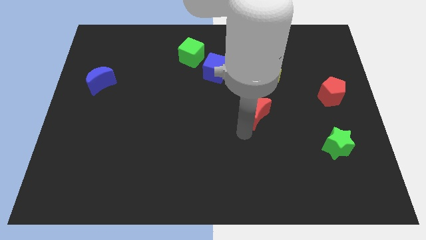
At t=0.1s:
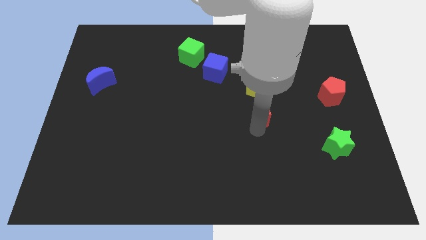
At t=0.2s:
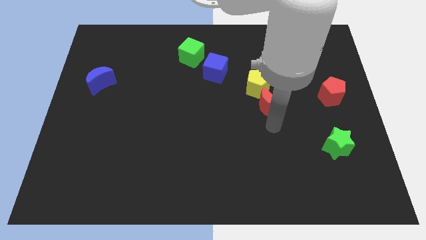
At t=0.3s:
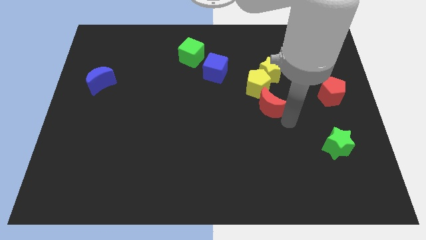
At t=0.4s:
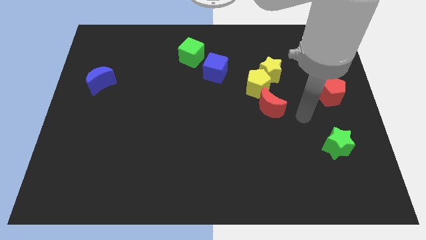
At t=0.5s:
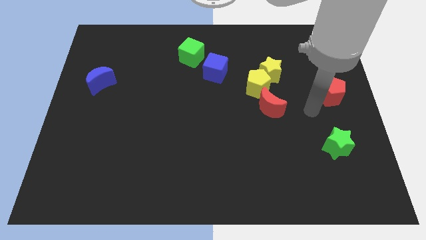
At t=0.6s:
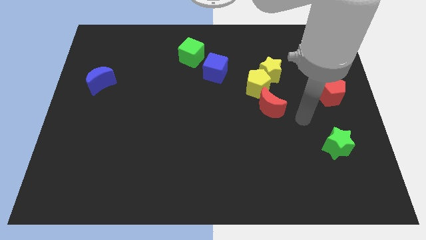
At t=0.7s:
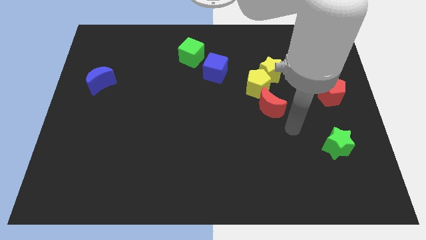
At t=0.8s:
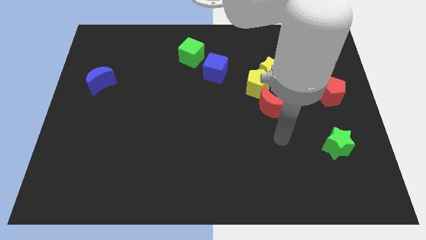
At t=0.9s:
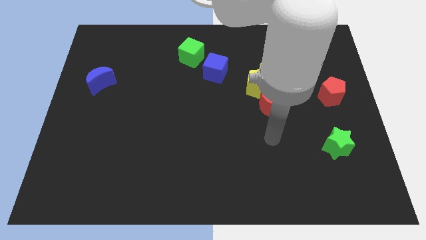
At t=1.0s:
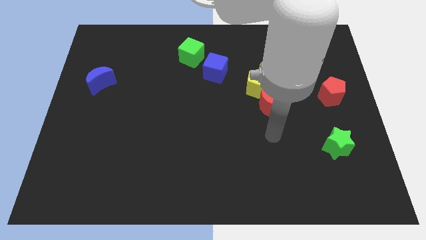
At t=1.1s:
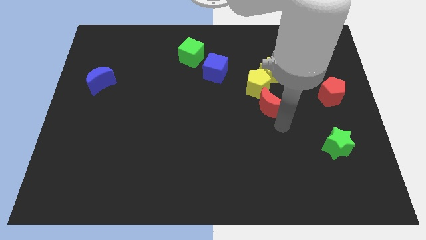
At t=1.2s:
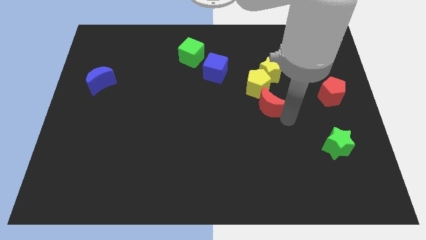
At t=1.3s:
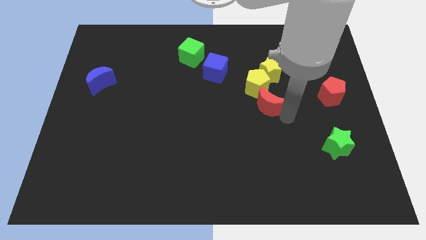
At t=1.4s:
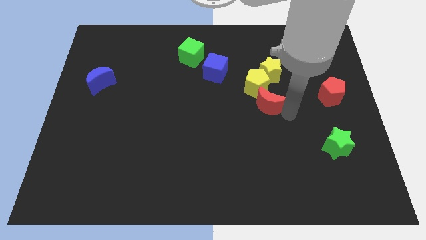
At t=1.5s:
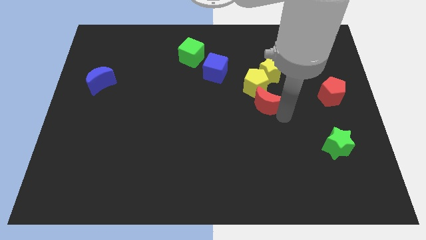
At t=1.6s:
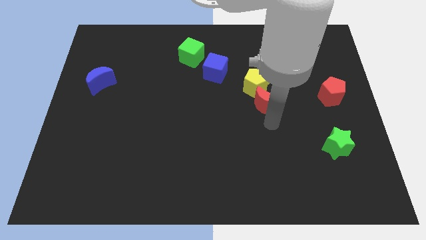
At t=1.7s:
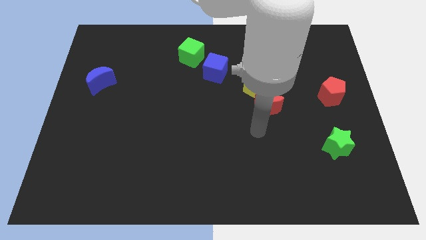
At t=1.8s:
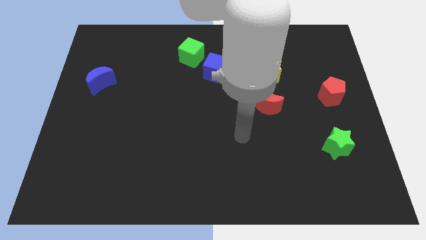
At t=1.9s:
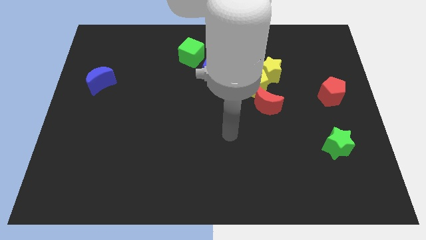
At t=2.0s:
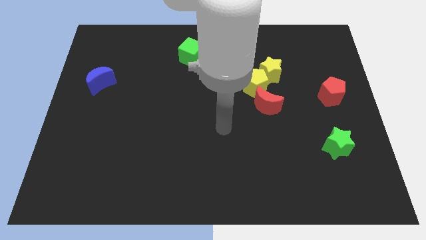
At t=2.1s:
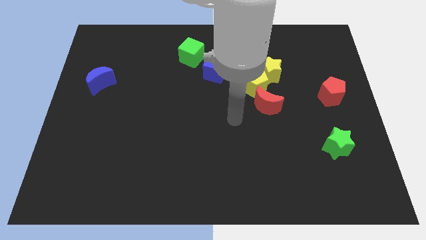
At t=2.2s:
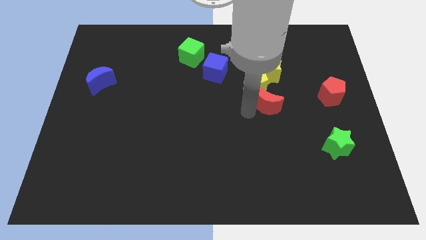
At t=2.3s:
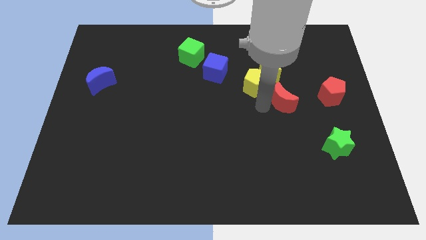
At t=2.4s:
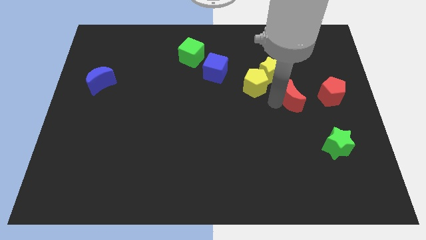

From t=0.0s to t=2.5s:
push red crescent below yellow star

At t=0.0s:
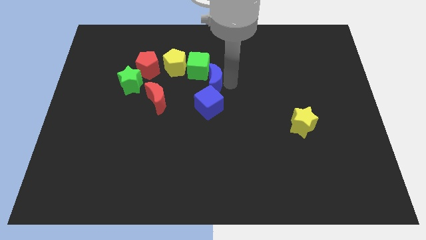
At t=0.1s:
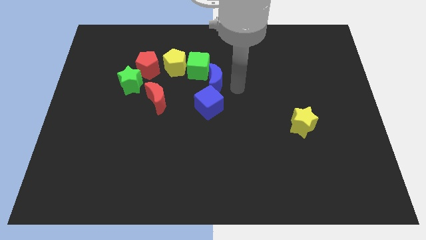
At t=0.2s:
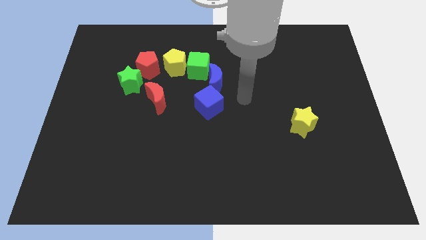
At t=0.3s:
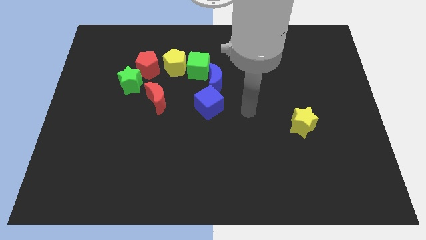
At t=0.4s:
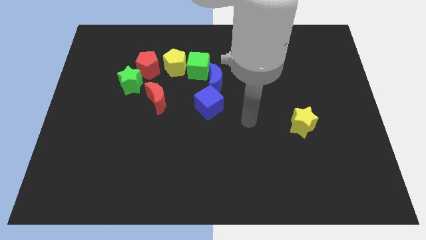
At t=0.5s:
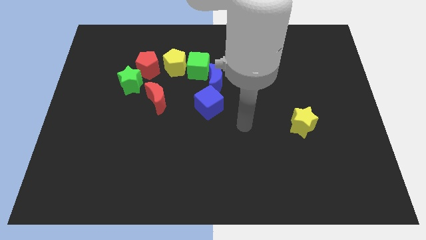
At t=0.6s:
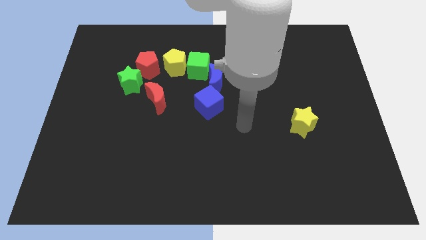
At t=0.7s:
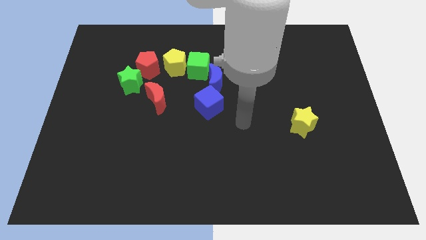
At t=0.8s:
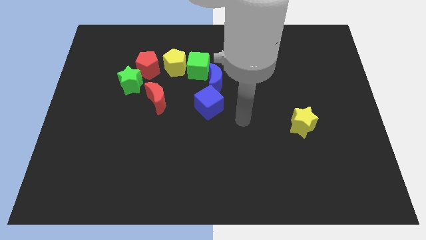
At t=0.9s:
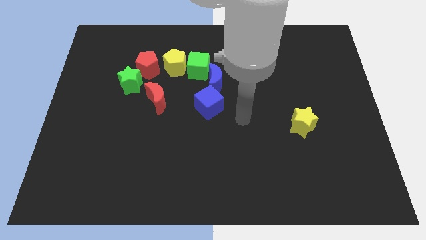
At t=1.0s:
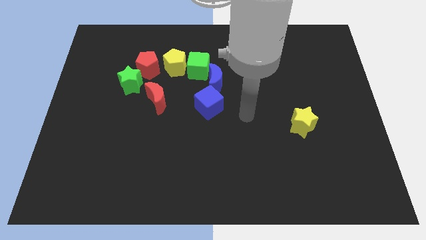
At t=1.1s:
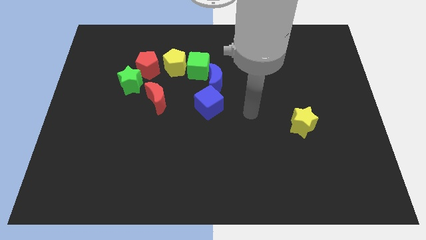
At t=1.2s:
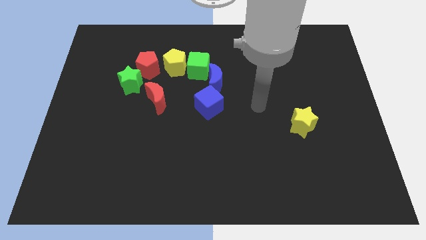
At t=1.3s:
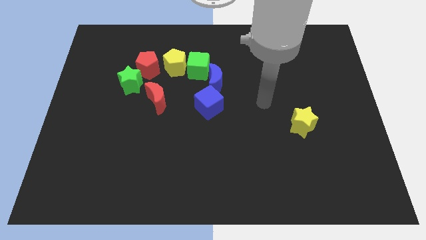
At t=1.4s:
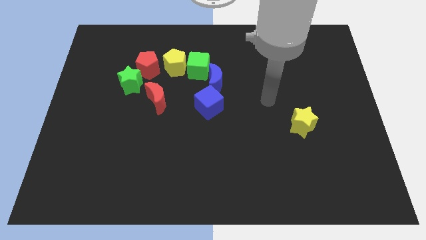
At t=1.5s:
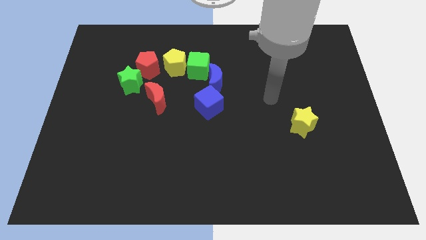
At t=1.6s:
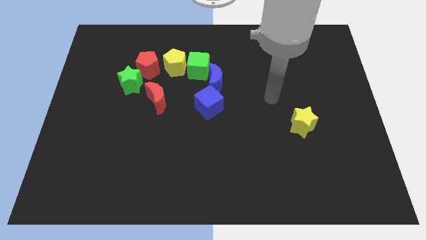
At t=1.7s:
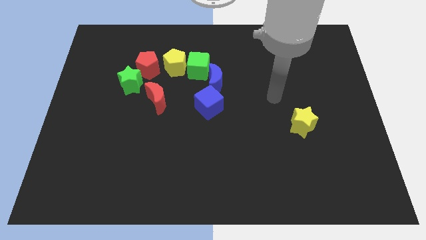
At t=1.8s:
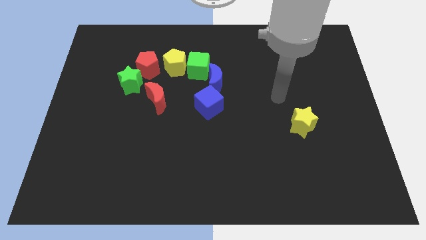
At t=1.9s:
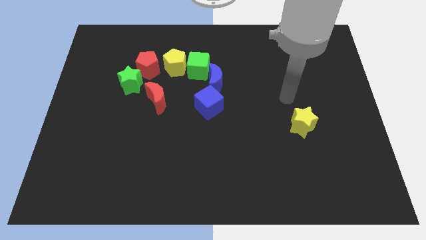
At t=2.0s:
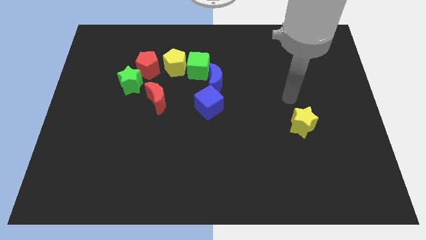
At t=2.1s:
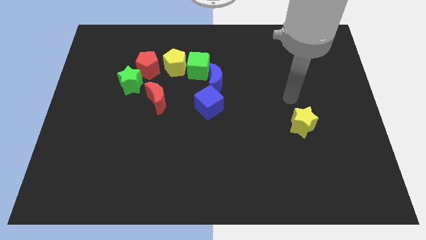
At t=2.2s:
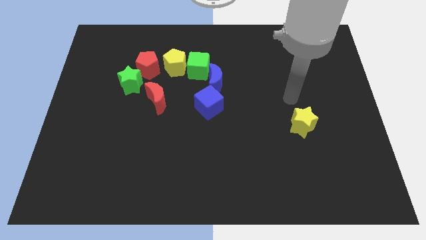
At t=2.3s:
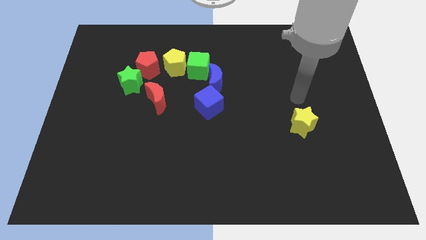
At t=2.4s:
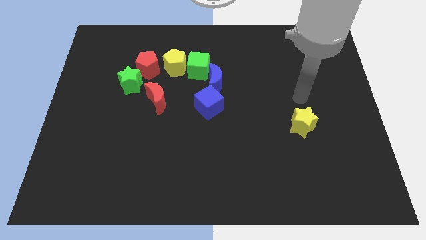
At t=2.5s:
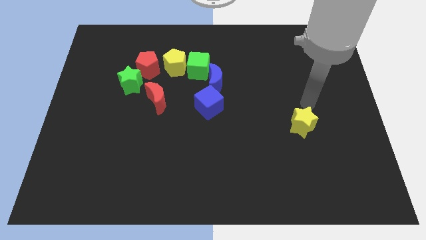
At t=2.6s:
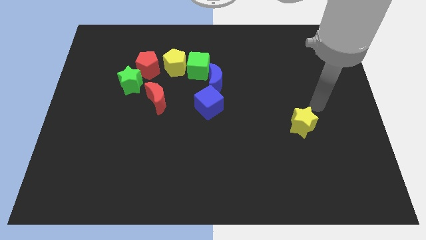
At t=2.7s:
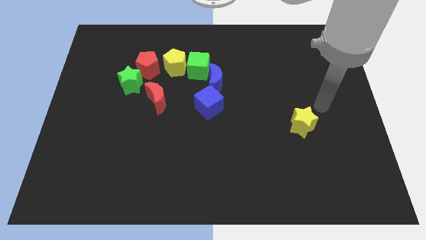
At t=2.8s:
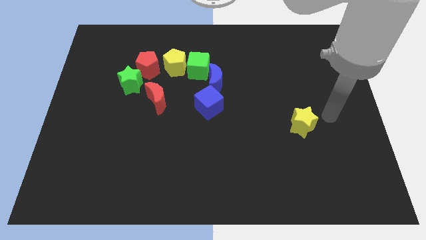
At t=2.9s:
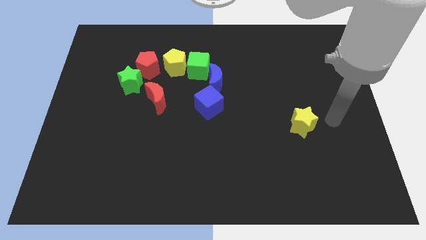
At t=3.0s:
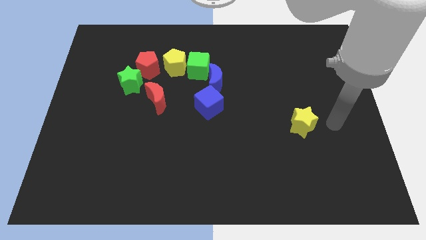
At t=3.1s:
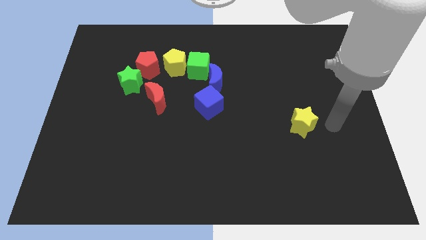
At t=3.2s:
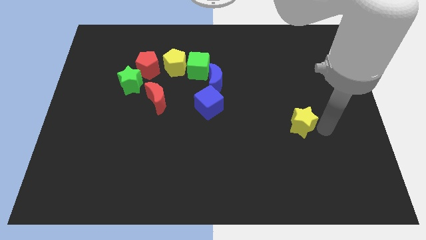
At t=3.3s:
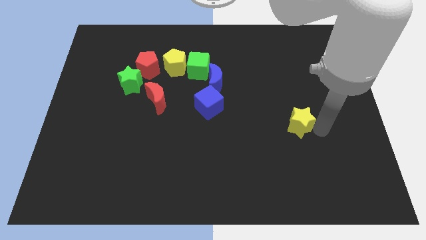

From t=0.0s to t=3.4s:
move your arm towards the yellow star

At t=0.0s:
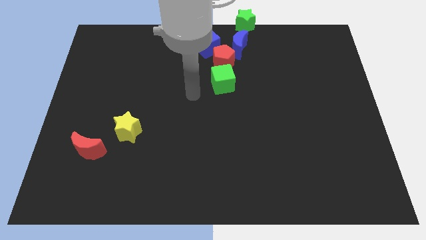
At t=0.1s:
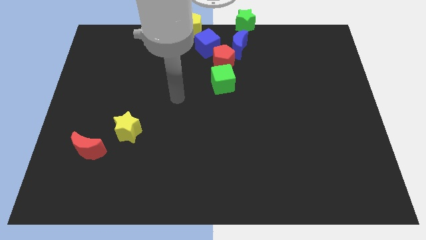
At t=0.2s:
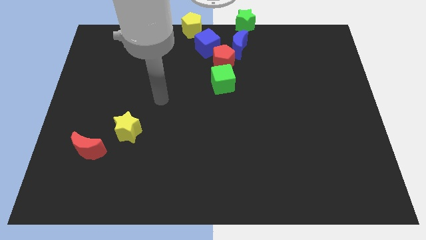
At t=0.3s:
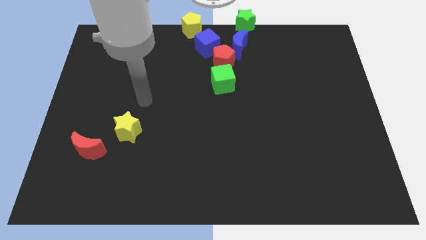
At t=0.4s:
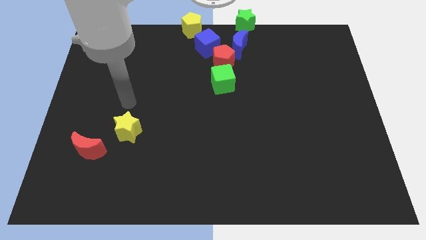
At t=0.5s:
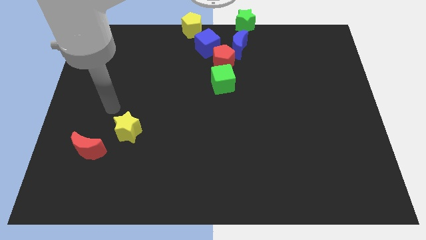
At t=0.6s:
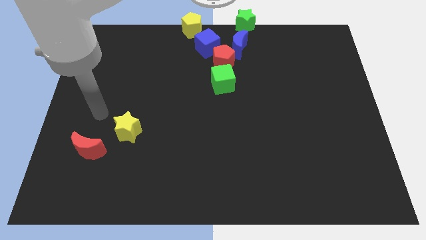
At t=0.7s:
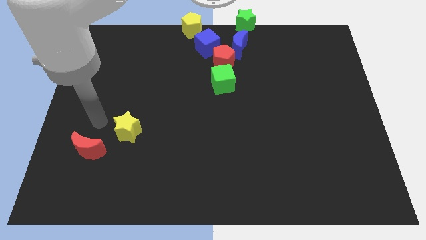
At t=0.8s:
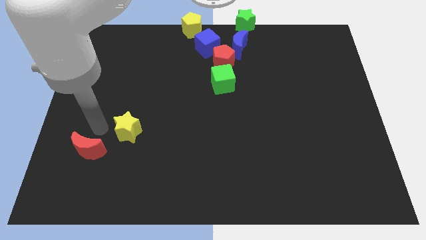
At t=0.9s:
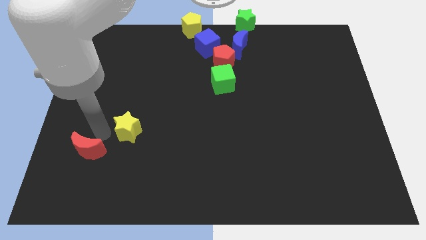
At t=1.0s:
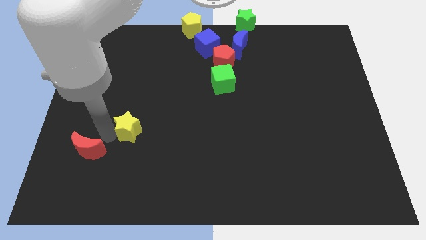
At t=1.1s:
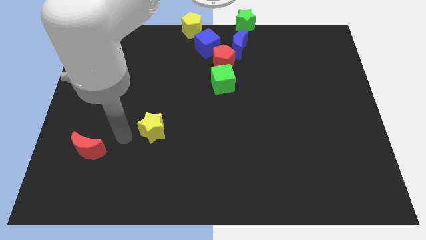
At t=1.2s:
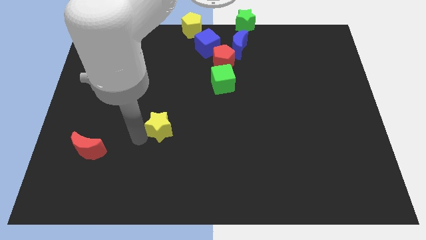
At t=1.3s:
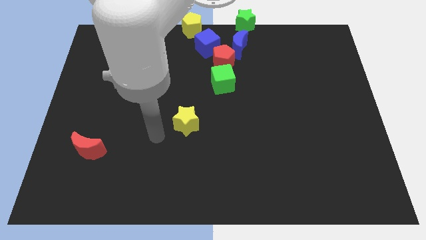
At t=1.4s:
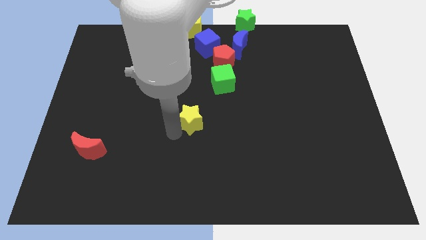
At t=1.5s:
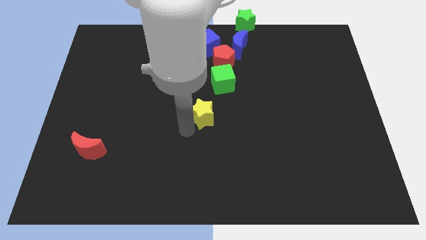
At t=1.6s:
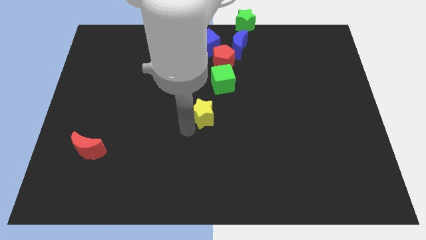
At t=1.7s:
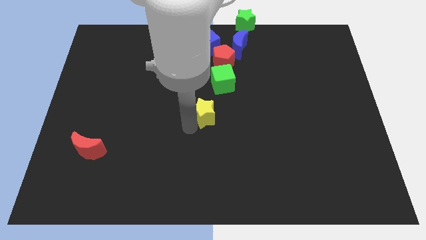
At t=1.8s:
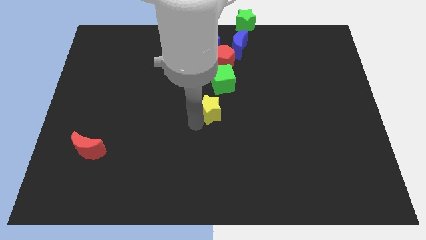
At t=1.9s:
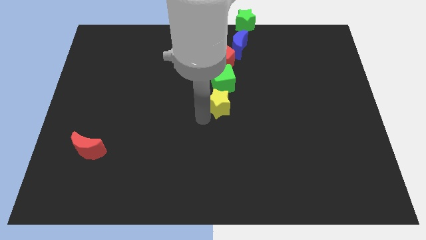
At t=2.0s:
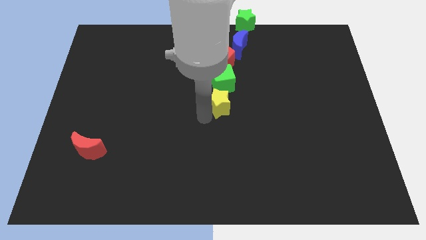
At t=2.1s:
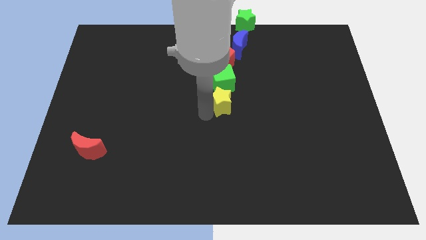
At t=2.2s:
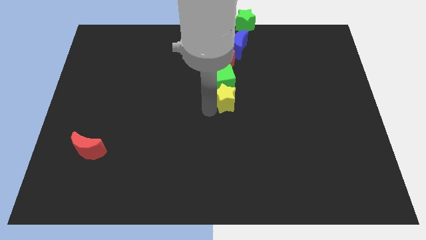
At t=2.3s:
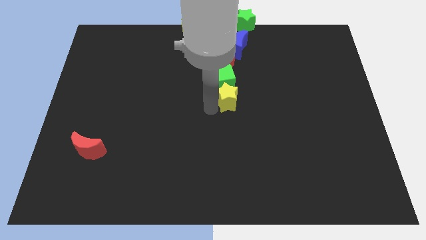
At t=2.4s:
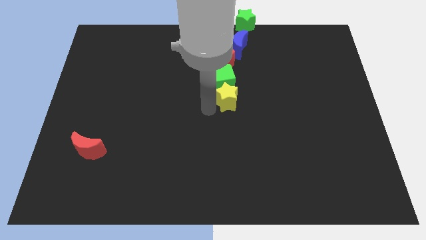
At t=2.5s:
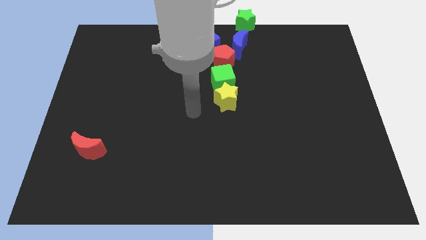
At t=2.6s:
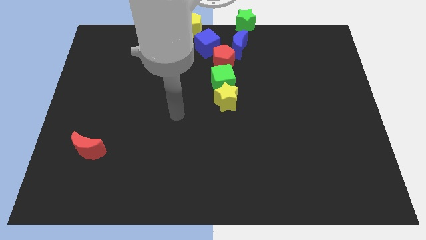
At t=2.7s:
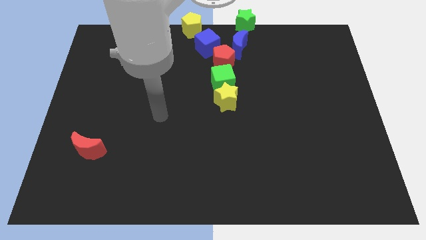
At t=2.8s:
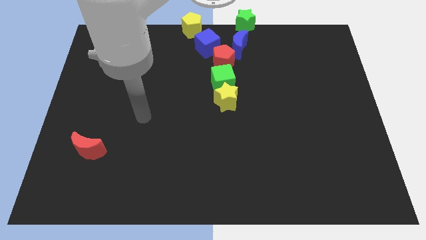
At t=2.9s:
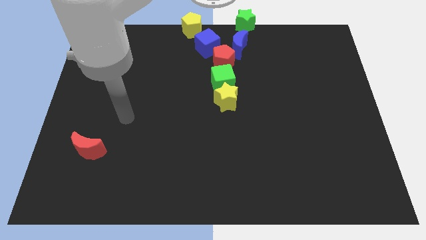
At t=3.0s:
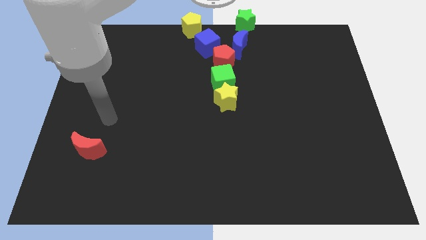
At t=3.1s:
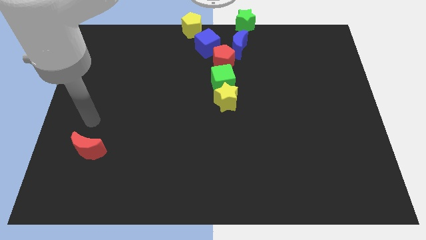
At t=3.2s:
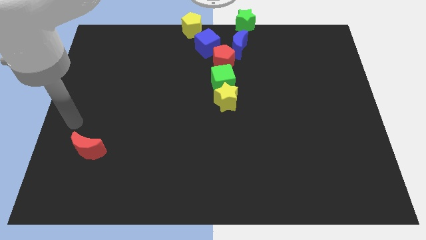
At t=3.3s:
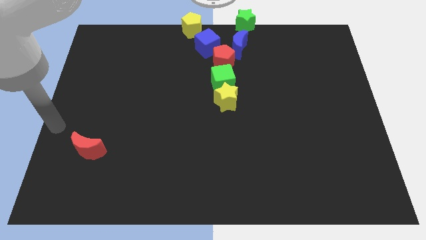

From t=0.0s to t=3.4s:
move the yellow star to the bottom of the green cube
